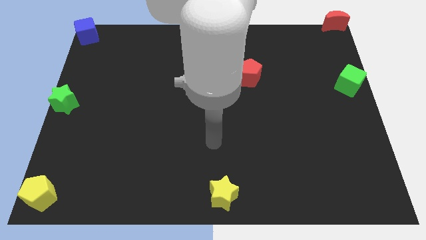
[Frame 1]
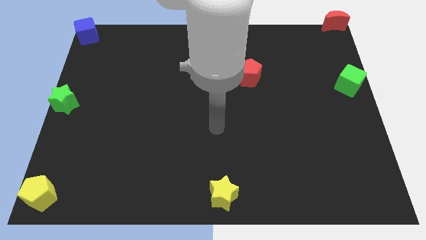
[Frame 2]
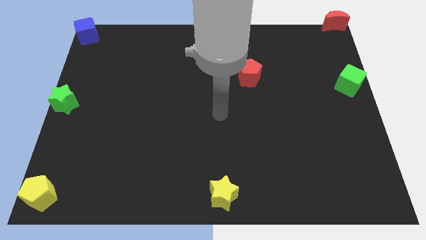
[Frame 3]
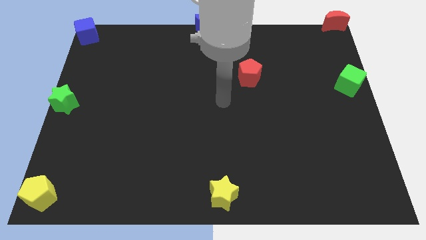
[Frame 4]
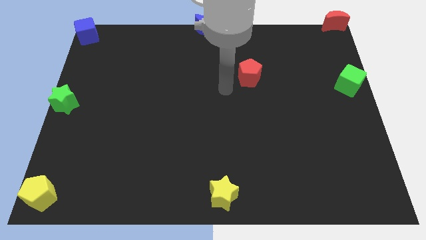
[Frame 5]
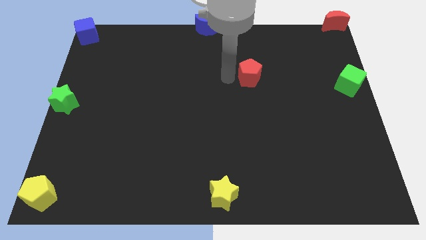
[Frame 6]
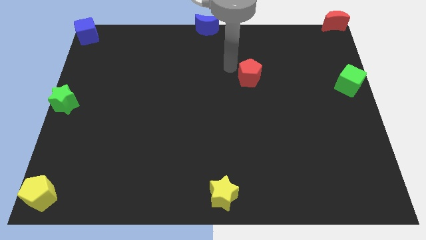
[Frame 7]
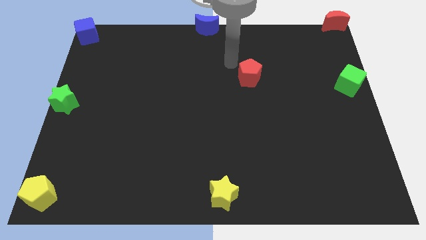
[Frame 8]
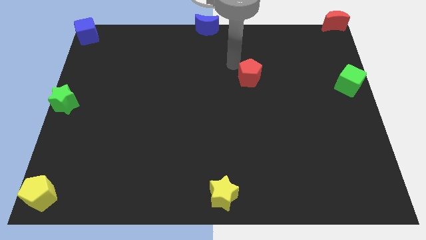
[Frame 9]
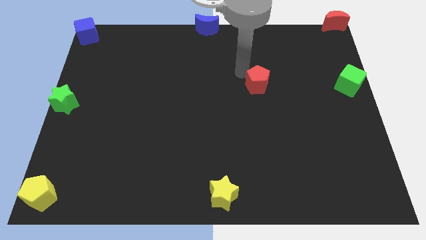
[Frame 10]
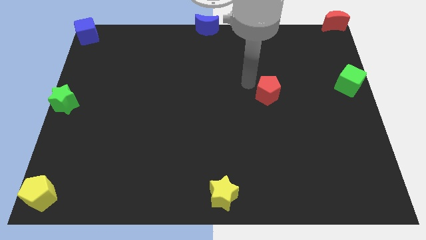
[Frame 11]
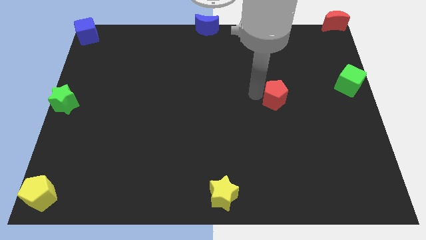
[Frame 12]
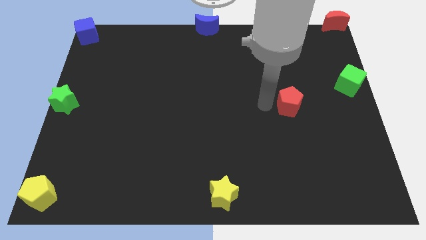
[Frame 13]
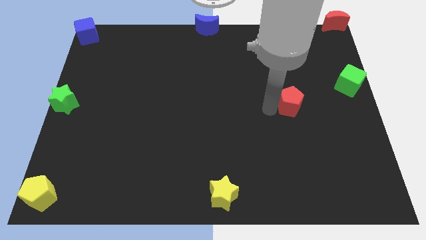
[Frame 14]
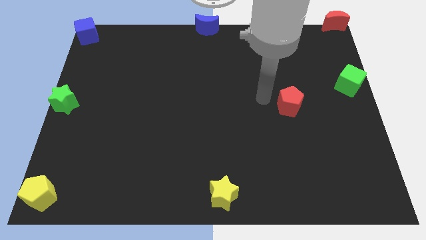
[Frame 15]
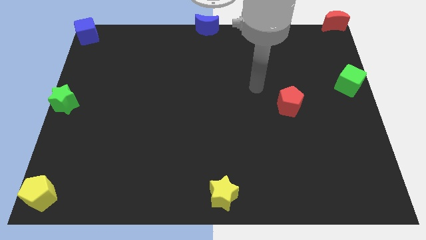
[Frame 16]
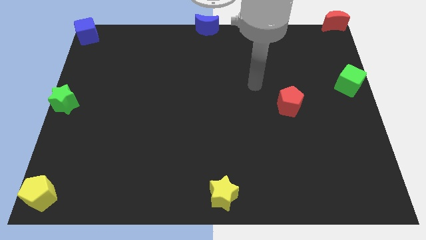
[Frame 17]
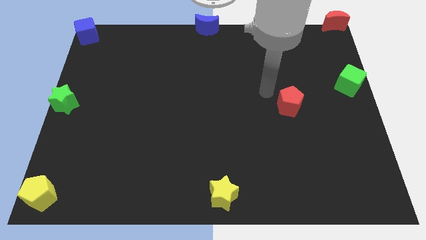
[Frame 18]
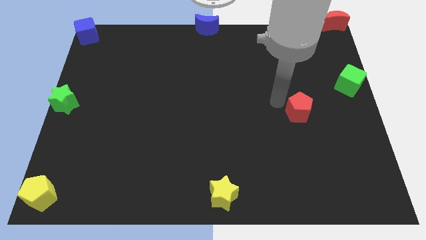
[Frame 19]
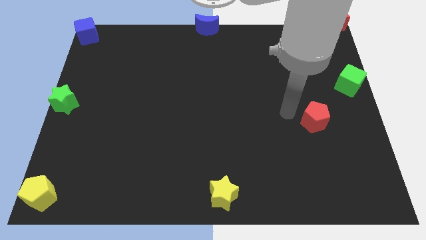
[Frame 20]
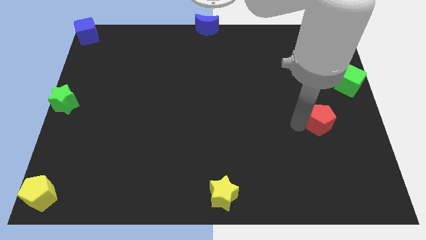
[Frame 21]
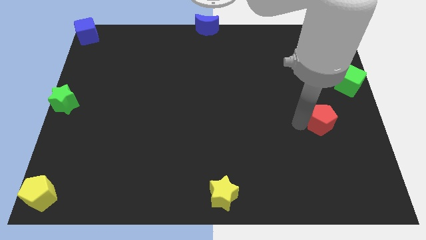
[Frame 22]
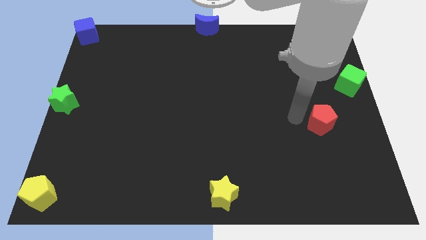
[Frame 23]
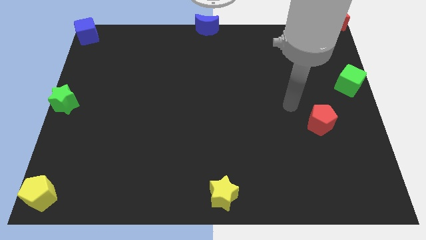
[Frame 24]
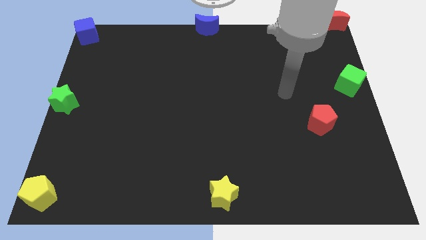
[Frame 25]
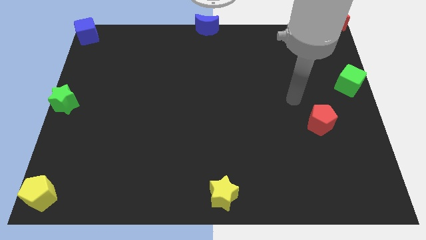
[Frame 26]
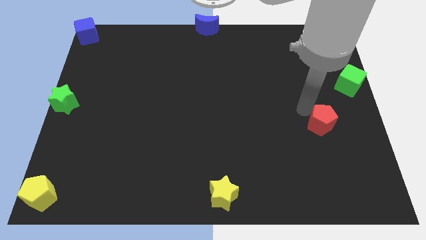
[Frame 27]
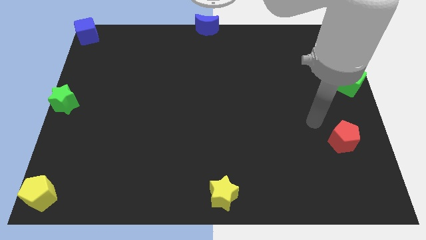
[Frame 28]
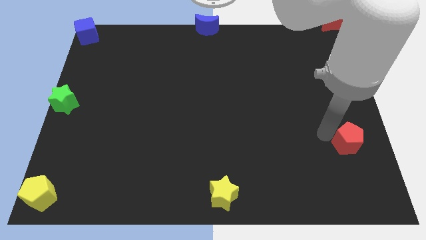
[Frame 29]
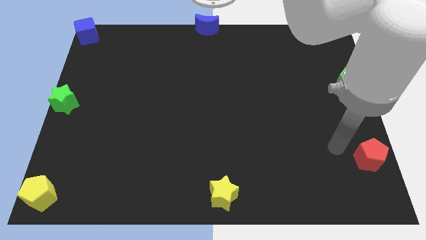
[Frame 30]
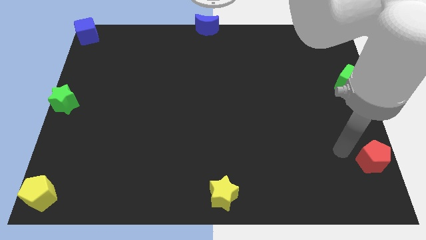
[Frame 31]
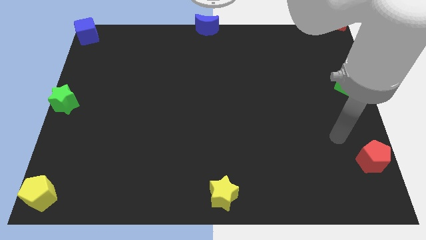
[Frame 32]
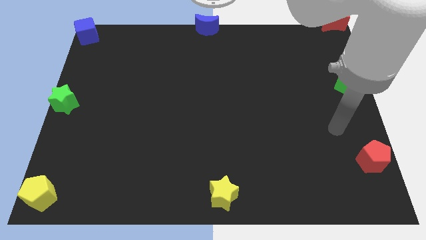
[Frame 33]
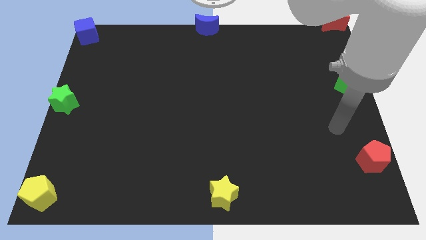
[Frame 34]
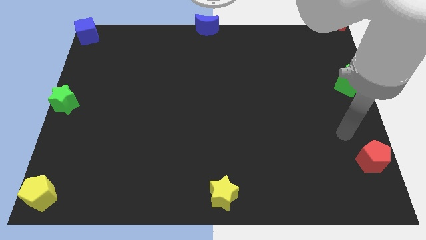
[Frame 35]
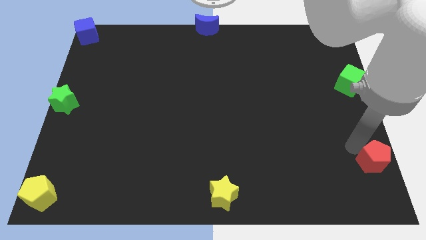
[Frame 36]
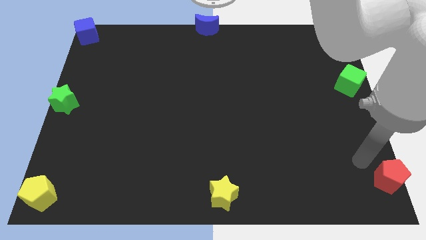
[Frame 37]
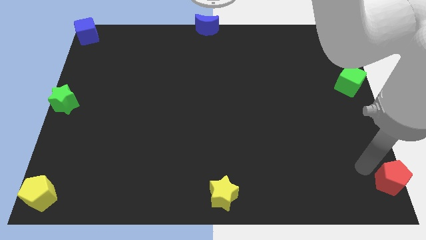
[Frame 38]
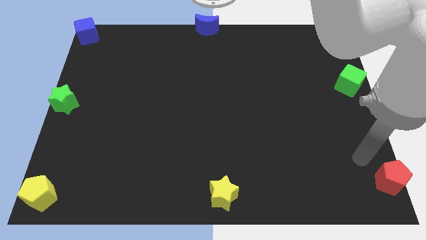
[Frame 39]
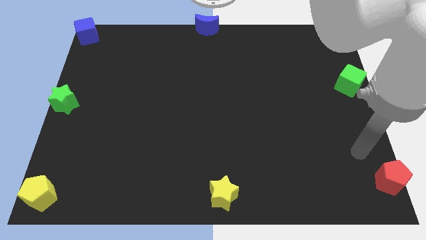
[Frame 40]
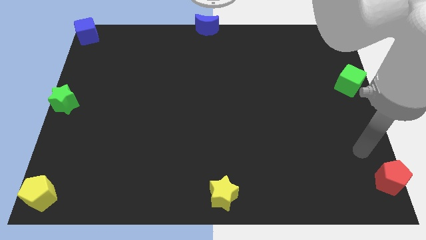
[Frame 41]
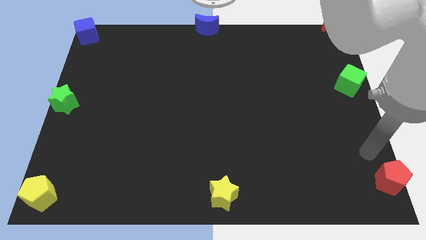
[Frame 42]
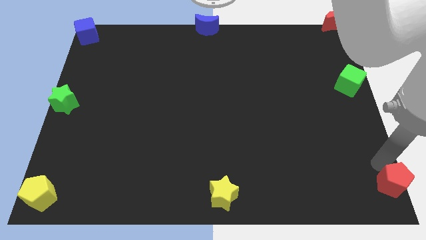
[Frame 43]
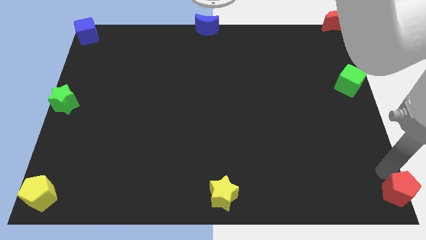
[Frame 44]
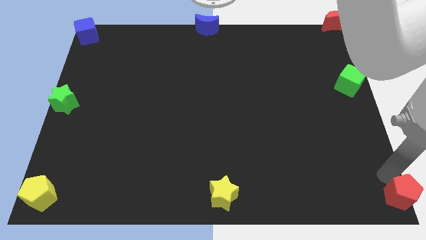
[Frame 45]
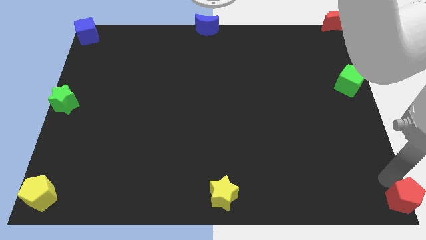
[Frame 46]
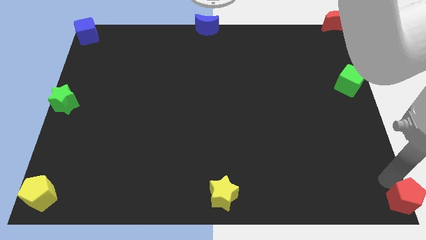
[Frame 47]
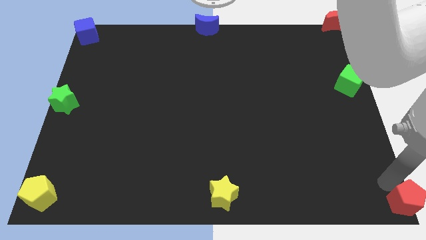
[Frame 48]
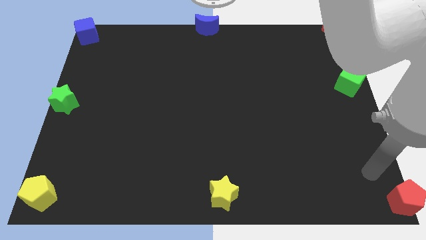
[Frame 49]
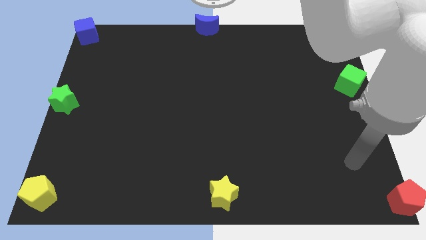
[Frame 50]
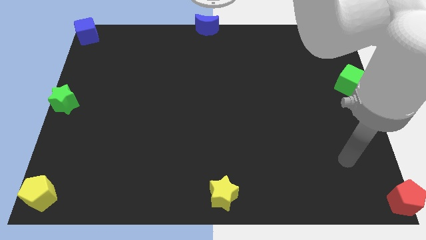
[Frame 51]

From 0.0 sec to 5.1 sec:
move the red pentagon towards the bottom right corner of the board

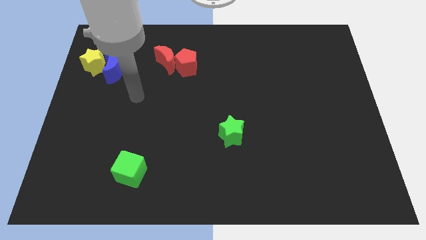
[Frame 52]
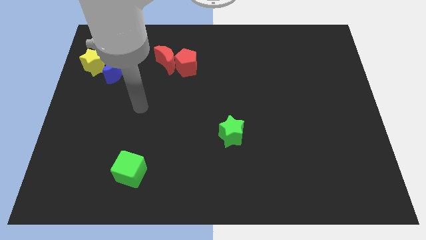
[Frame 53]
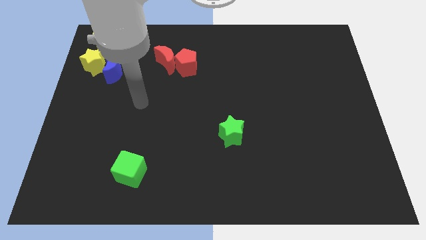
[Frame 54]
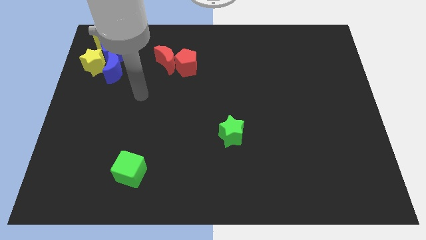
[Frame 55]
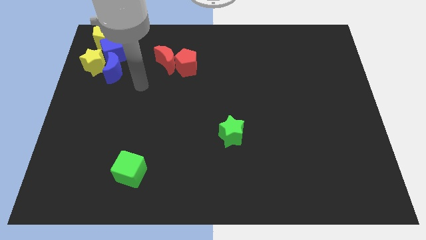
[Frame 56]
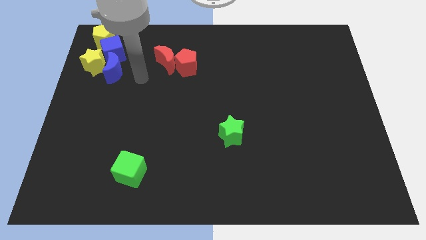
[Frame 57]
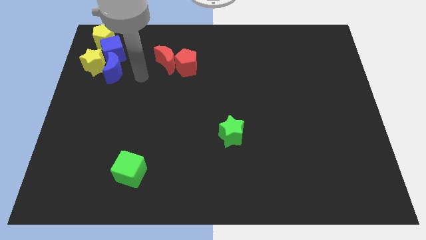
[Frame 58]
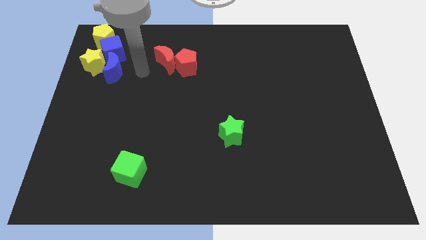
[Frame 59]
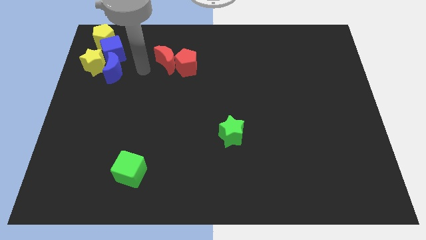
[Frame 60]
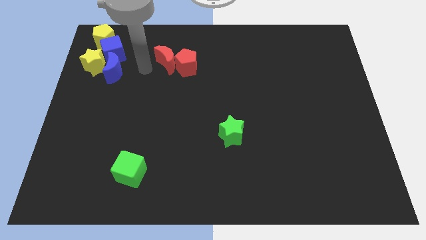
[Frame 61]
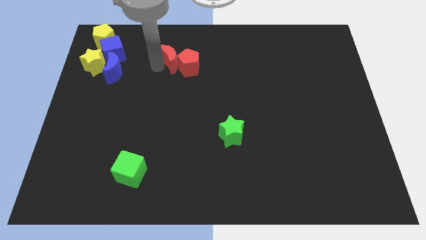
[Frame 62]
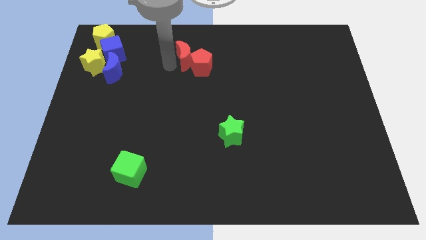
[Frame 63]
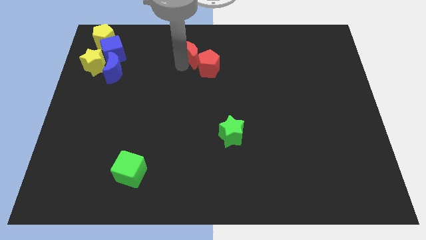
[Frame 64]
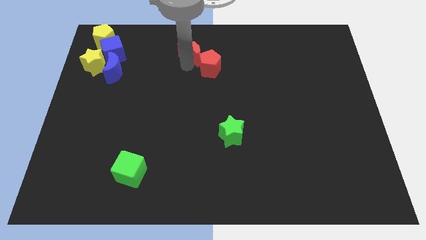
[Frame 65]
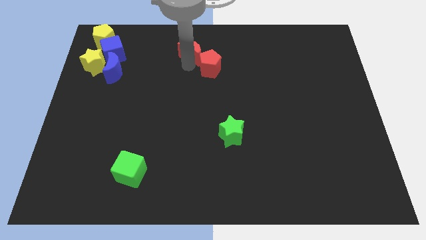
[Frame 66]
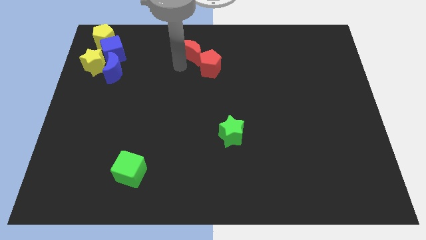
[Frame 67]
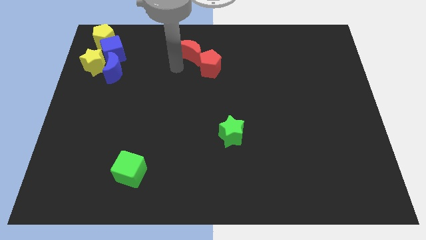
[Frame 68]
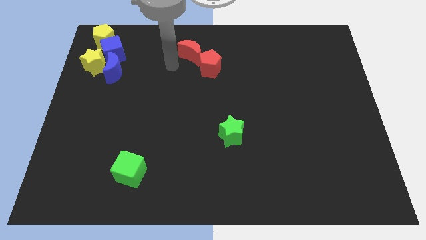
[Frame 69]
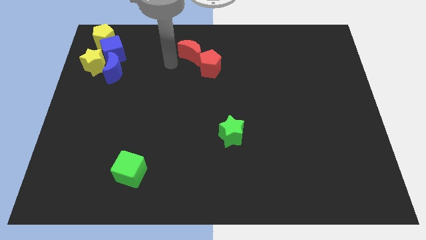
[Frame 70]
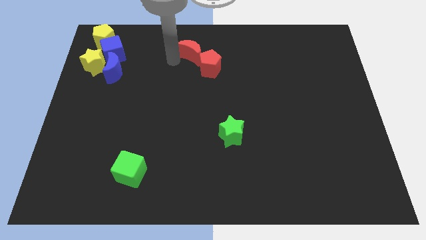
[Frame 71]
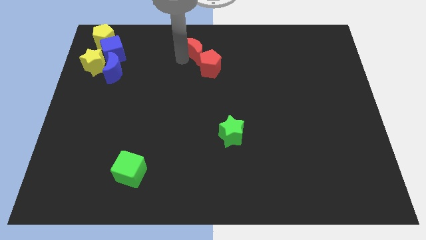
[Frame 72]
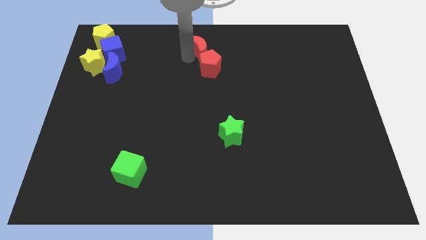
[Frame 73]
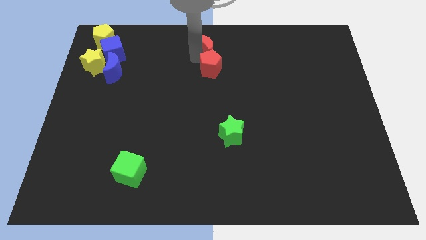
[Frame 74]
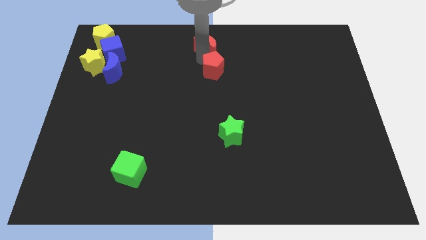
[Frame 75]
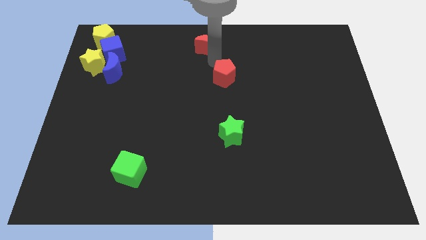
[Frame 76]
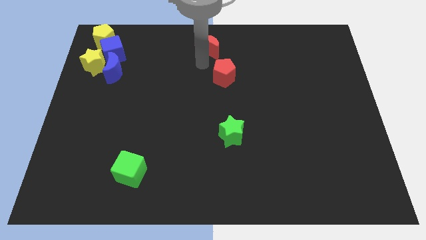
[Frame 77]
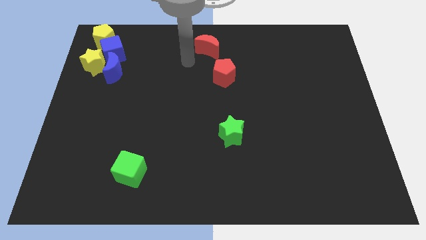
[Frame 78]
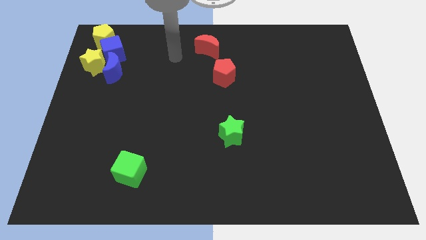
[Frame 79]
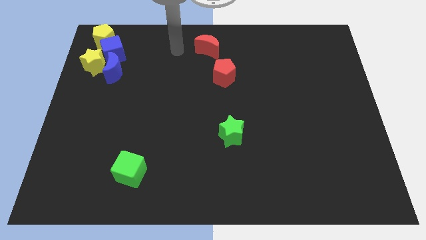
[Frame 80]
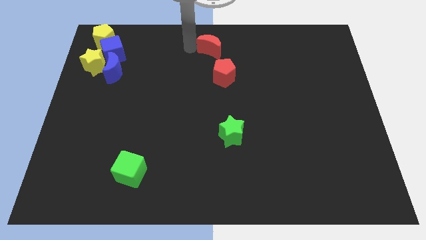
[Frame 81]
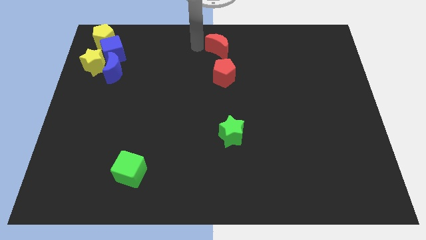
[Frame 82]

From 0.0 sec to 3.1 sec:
push the red blocks to the top of the green star

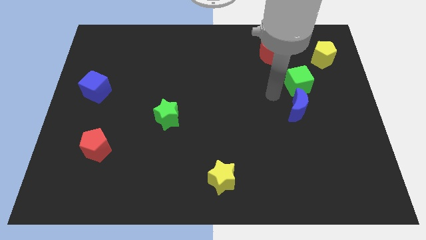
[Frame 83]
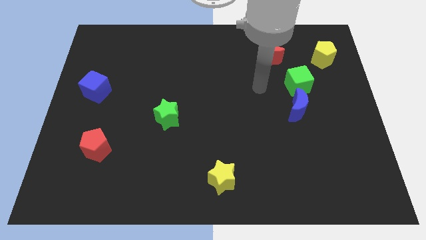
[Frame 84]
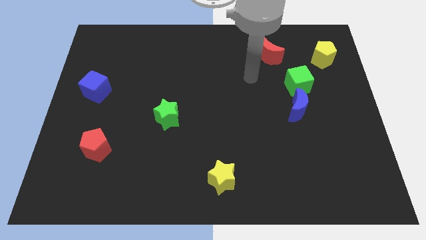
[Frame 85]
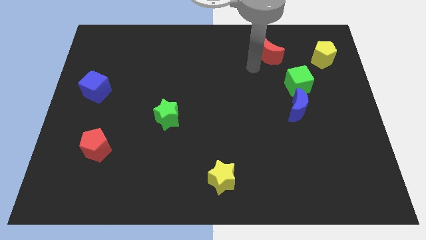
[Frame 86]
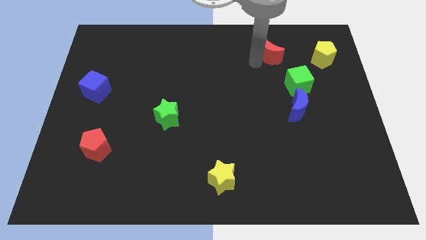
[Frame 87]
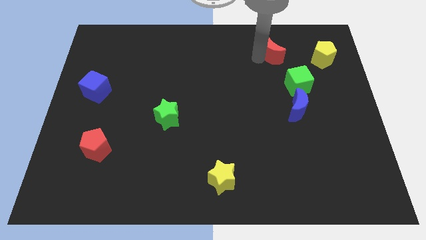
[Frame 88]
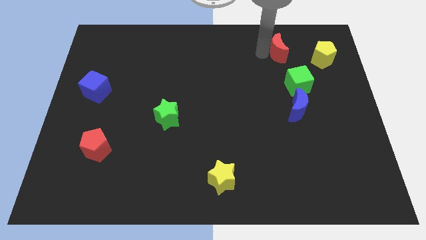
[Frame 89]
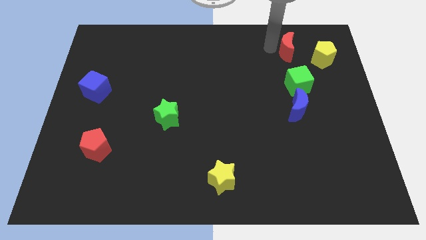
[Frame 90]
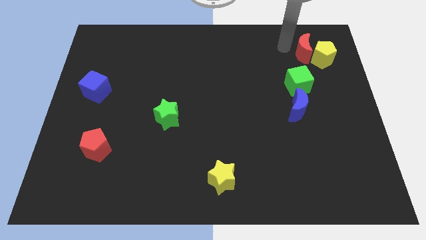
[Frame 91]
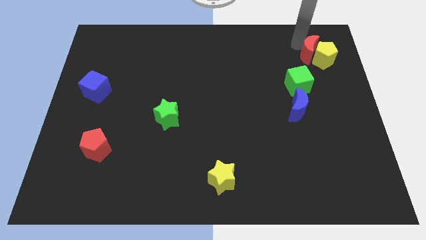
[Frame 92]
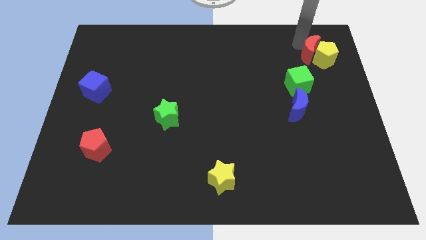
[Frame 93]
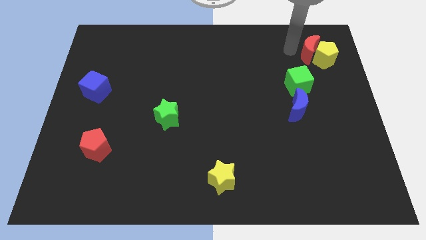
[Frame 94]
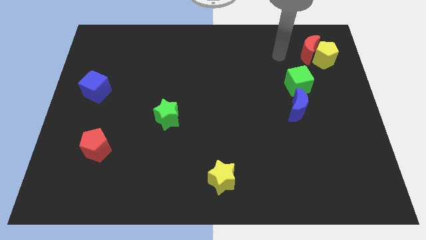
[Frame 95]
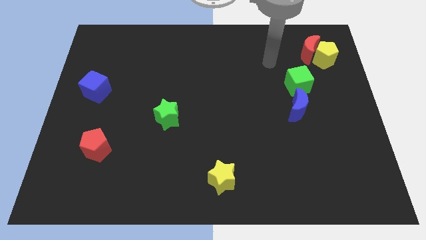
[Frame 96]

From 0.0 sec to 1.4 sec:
move the red crescent into the yellow pentagon
